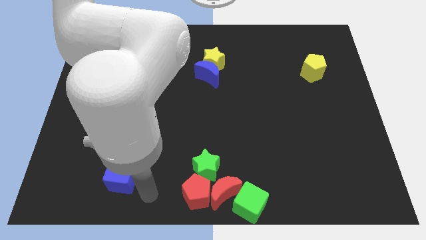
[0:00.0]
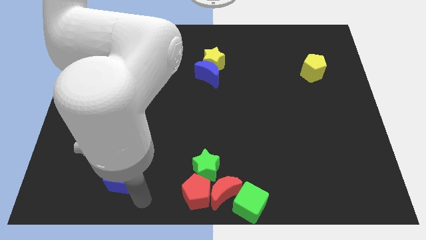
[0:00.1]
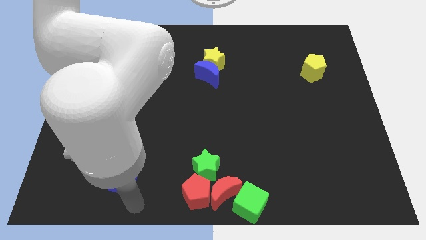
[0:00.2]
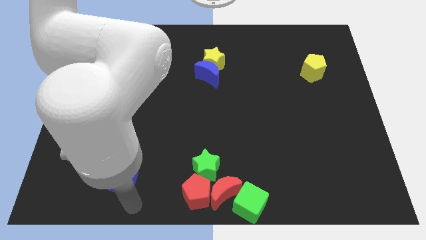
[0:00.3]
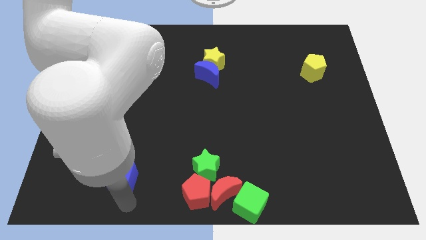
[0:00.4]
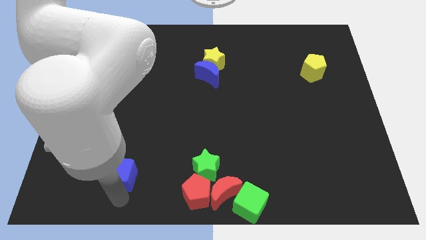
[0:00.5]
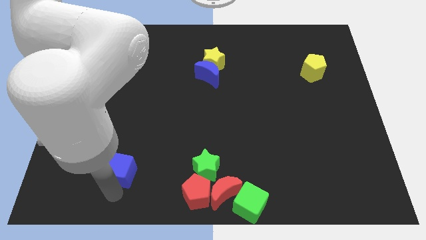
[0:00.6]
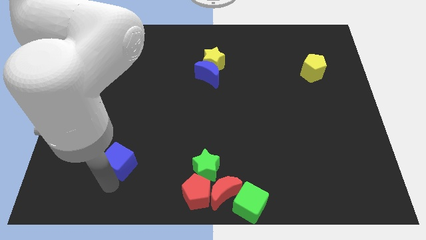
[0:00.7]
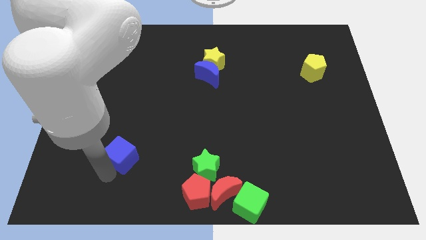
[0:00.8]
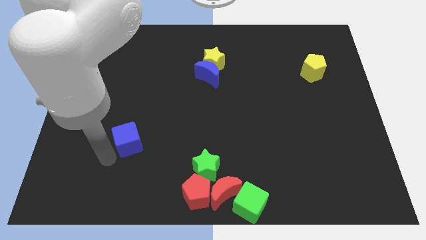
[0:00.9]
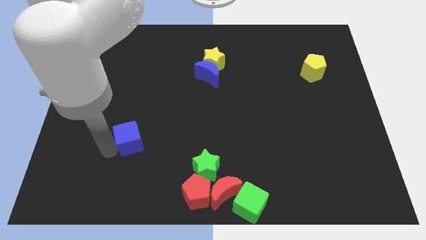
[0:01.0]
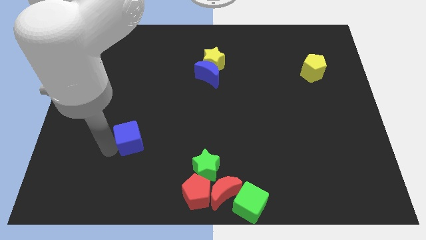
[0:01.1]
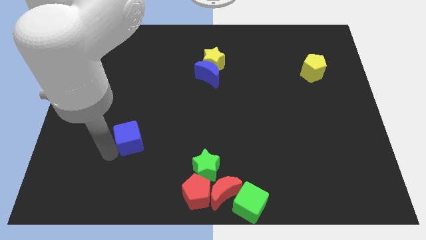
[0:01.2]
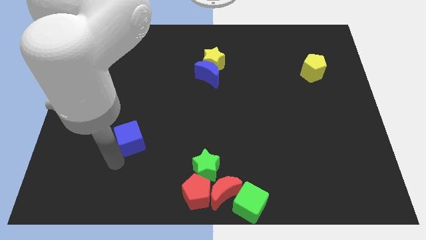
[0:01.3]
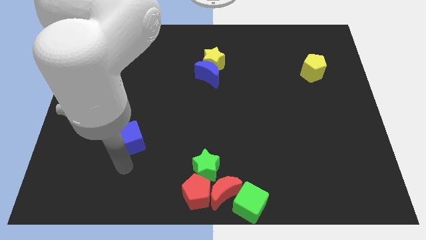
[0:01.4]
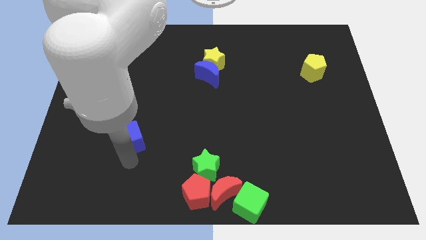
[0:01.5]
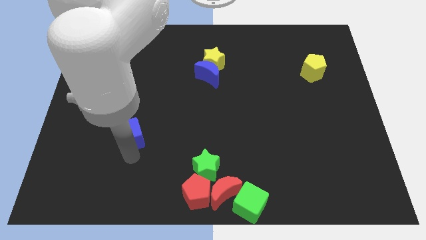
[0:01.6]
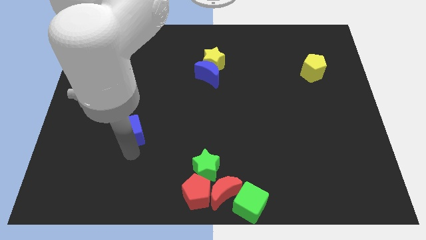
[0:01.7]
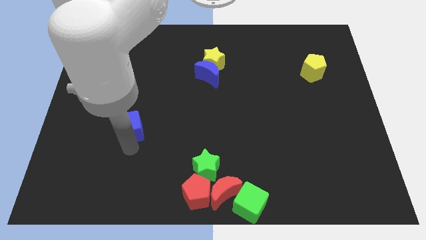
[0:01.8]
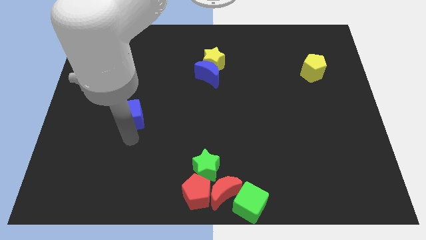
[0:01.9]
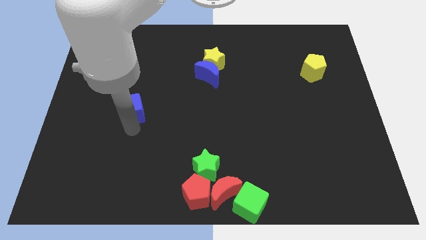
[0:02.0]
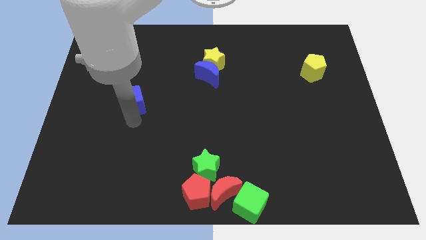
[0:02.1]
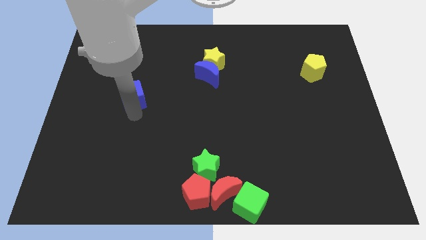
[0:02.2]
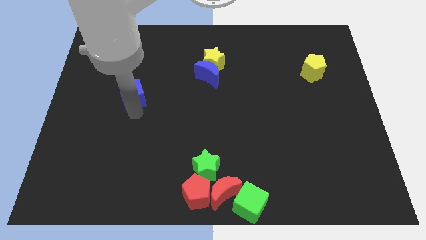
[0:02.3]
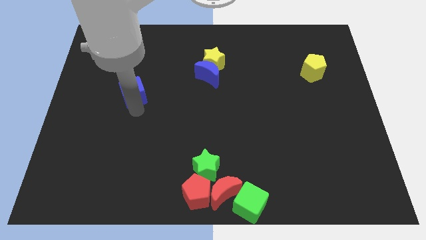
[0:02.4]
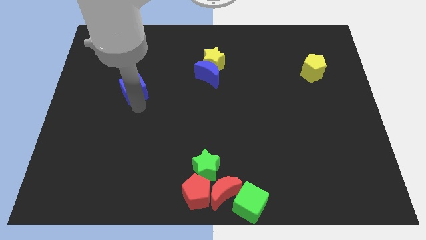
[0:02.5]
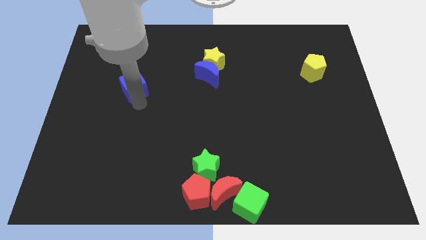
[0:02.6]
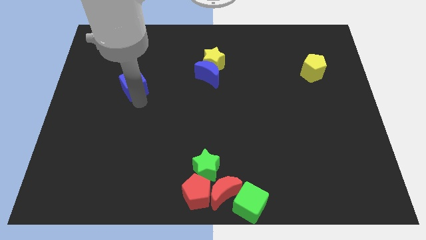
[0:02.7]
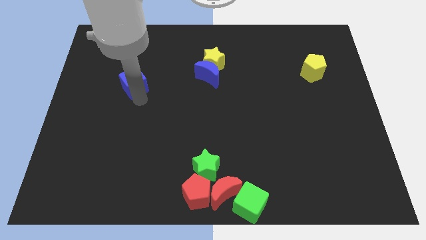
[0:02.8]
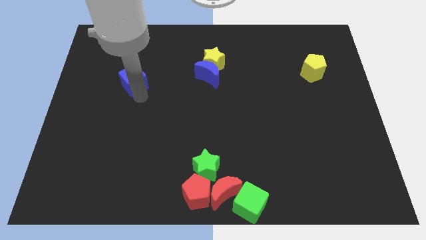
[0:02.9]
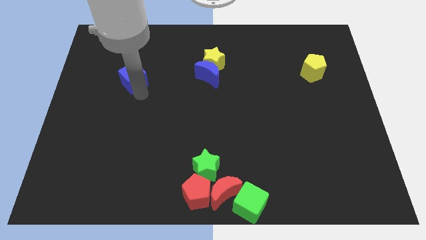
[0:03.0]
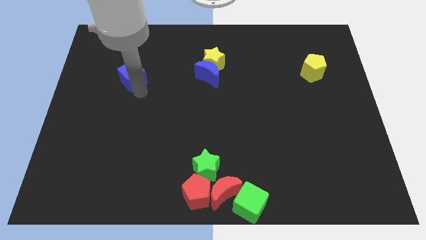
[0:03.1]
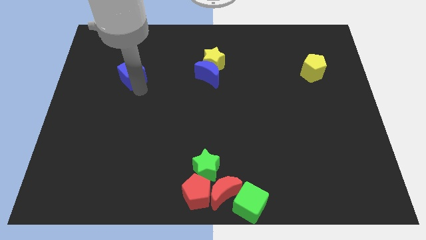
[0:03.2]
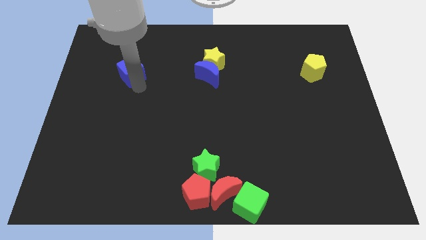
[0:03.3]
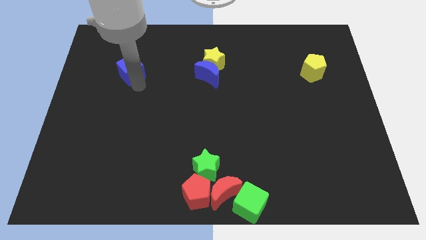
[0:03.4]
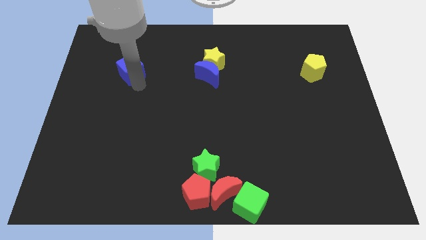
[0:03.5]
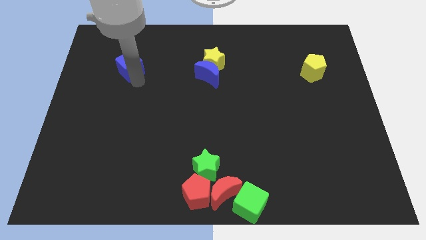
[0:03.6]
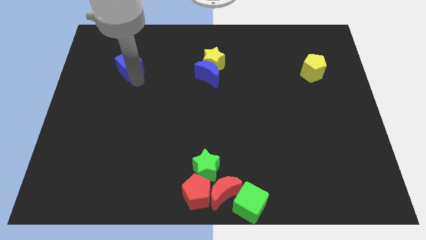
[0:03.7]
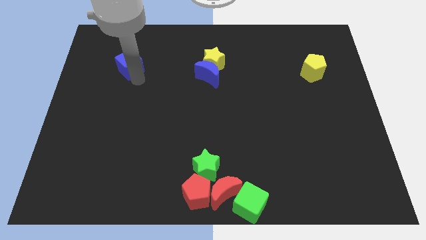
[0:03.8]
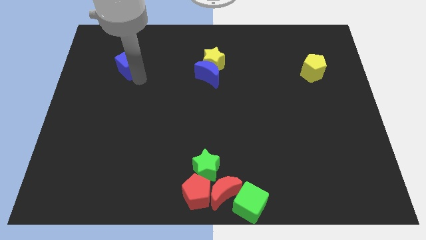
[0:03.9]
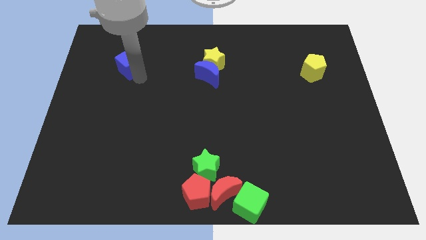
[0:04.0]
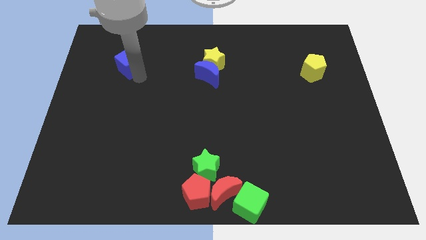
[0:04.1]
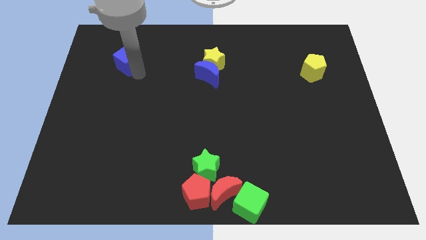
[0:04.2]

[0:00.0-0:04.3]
move the blue cube to the left of the blue crescent

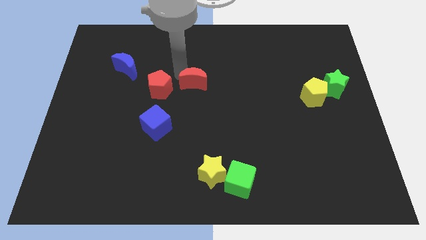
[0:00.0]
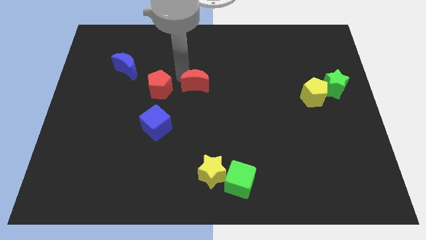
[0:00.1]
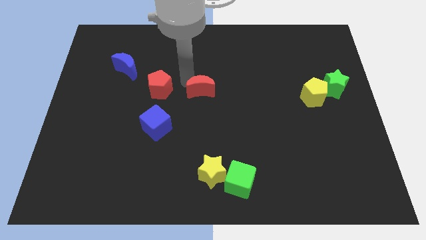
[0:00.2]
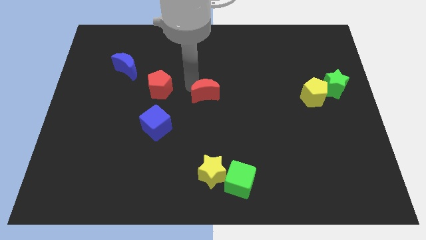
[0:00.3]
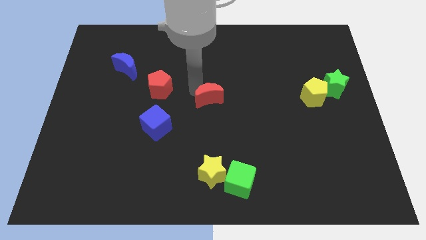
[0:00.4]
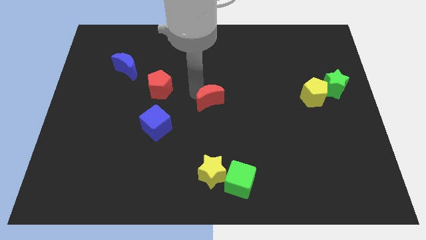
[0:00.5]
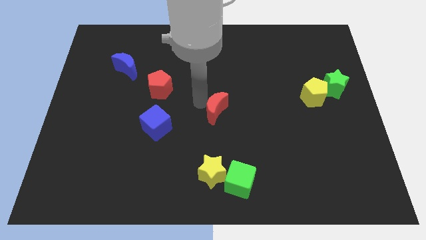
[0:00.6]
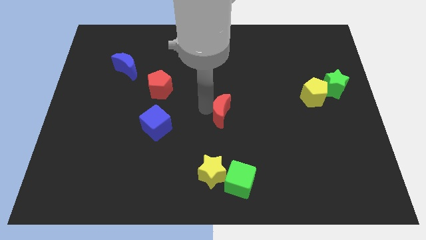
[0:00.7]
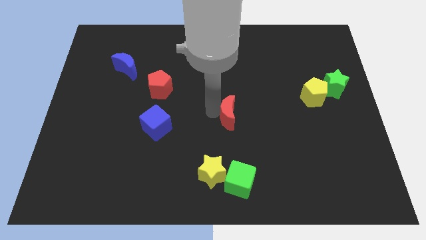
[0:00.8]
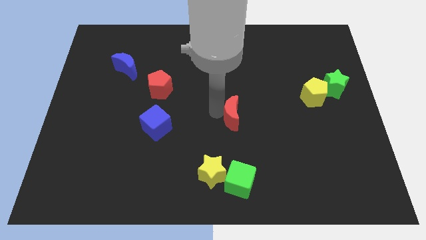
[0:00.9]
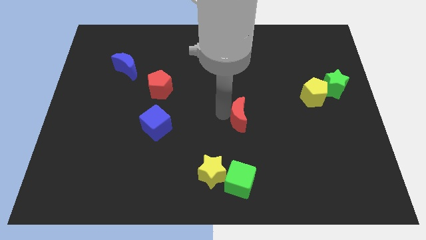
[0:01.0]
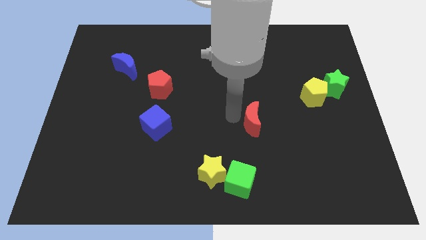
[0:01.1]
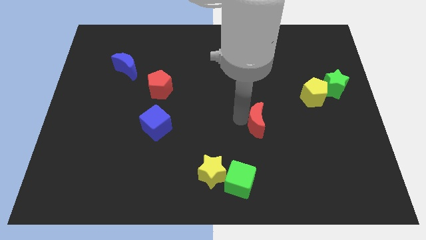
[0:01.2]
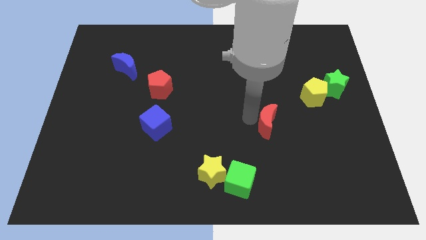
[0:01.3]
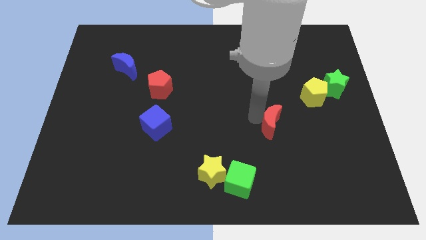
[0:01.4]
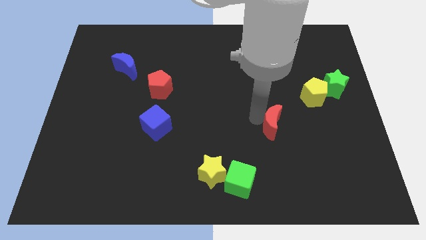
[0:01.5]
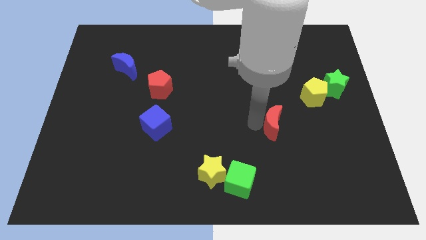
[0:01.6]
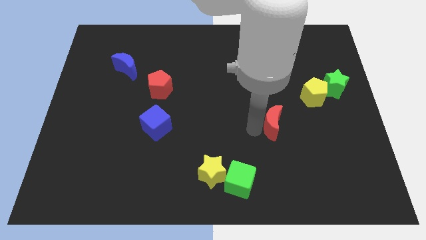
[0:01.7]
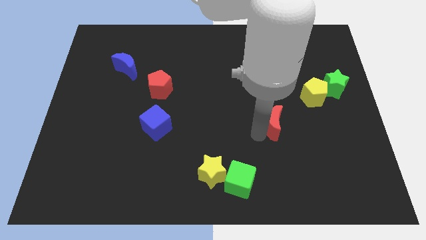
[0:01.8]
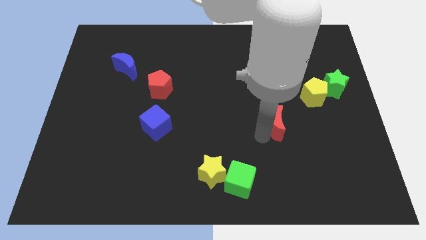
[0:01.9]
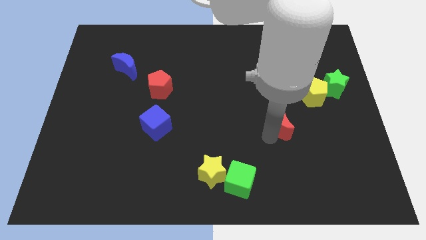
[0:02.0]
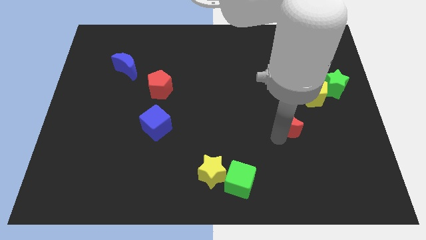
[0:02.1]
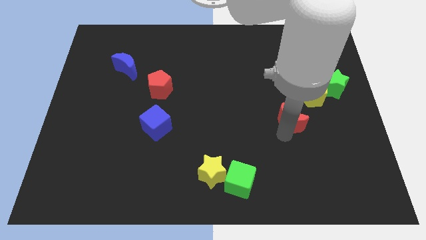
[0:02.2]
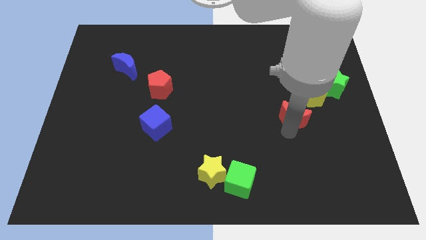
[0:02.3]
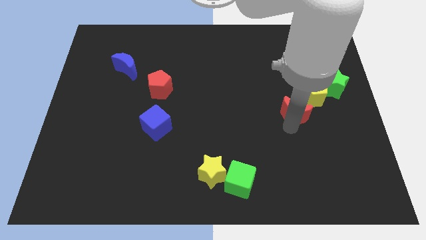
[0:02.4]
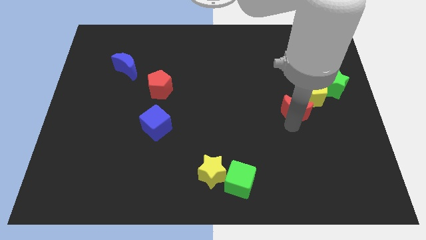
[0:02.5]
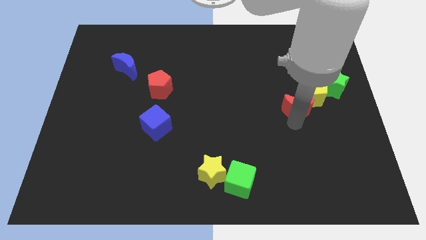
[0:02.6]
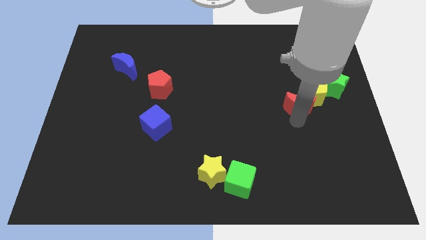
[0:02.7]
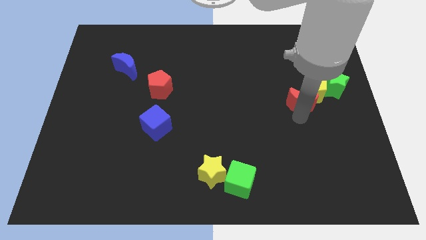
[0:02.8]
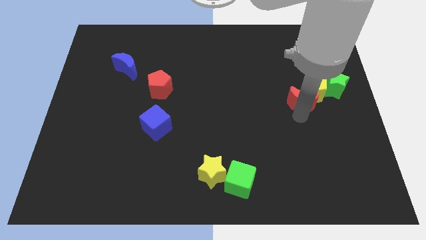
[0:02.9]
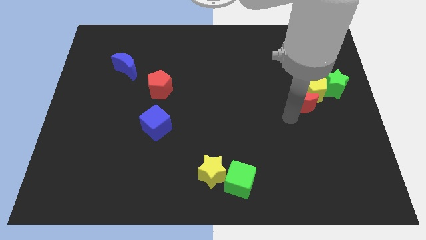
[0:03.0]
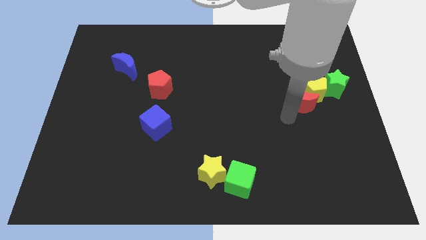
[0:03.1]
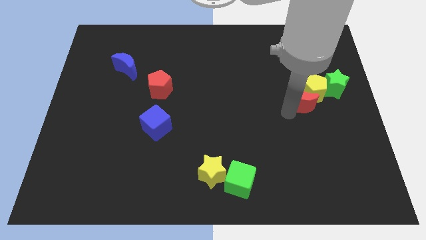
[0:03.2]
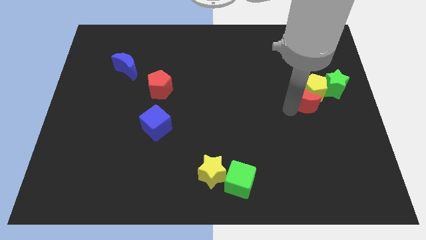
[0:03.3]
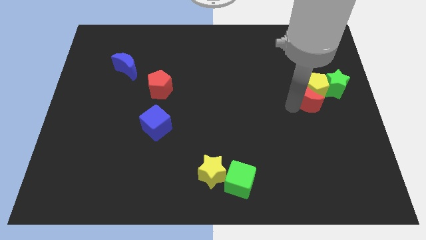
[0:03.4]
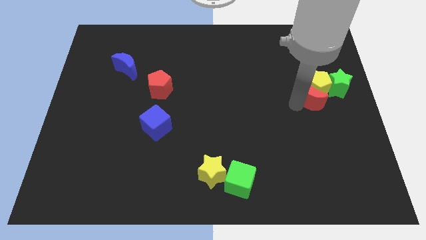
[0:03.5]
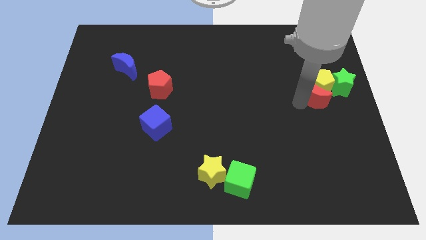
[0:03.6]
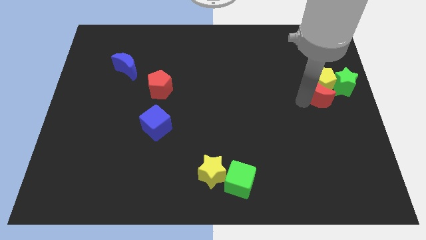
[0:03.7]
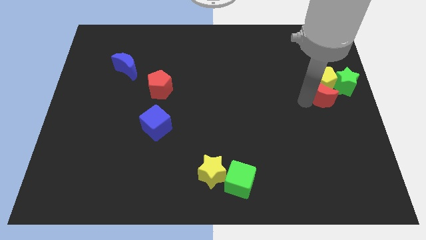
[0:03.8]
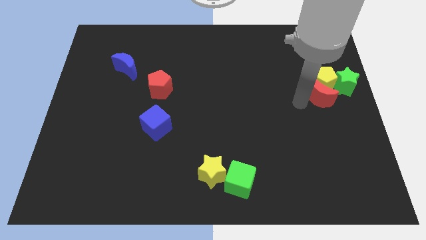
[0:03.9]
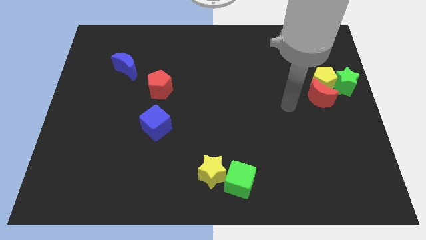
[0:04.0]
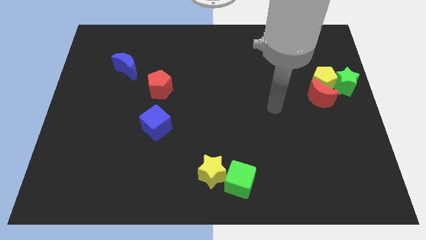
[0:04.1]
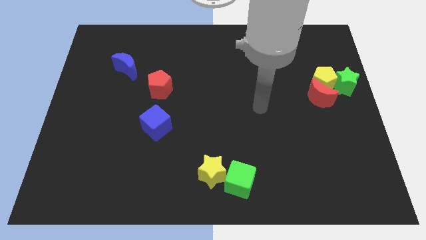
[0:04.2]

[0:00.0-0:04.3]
move the red crescent into the yellow pentagon

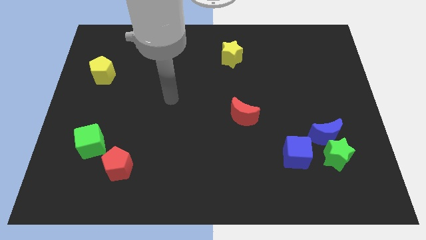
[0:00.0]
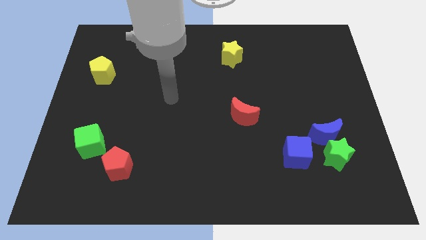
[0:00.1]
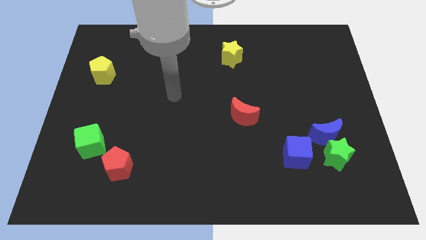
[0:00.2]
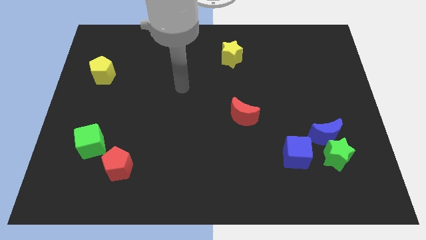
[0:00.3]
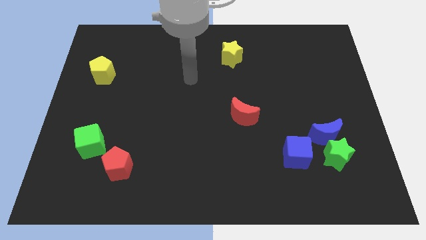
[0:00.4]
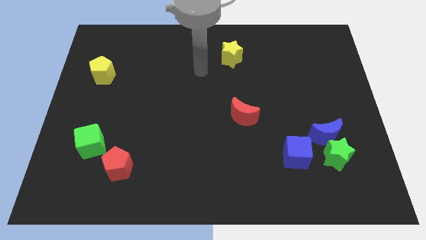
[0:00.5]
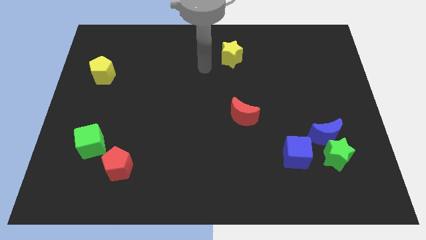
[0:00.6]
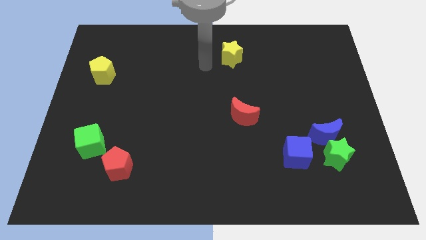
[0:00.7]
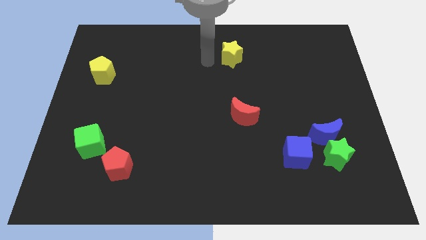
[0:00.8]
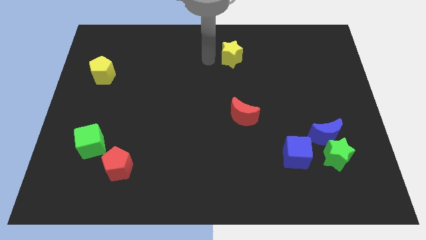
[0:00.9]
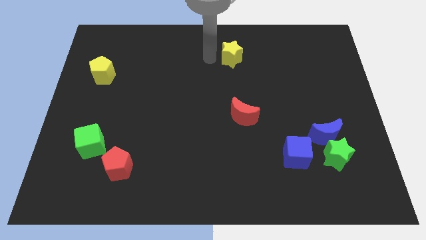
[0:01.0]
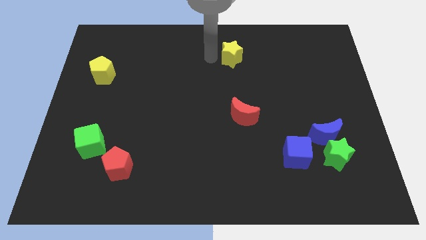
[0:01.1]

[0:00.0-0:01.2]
point your arm to the left side of yellow star
